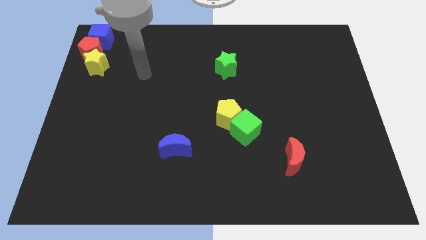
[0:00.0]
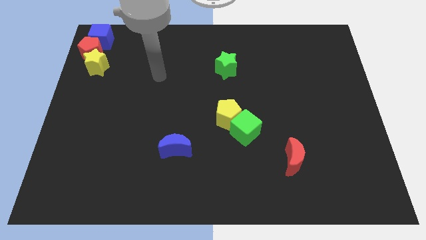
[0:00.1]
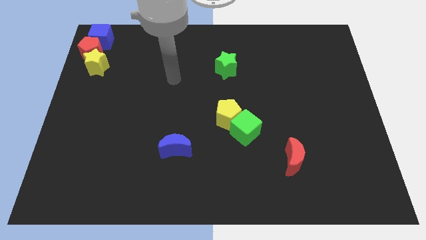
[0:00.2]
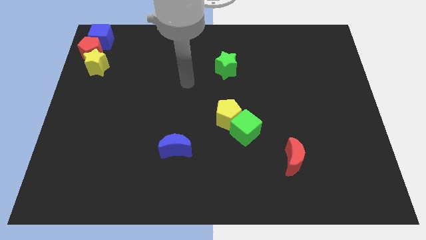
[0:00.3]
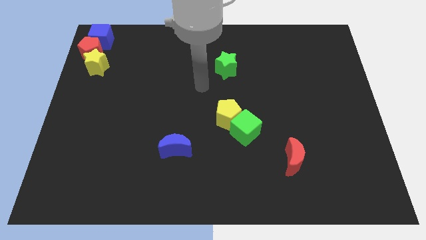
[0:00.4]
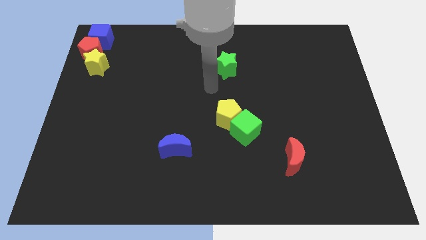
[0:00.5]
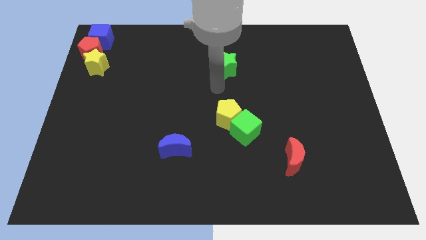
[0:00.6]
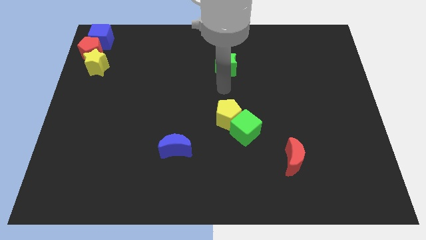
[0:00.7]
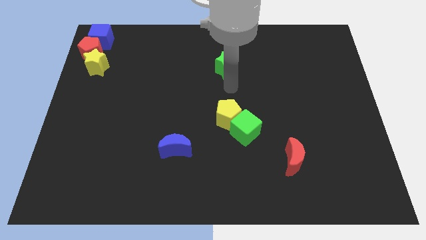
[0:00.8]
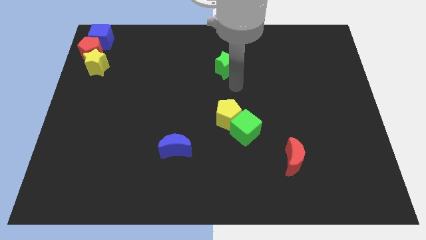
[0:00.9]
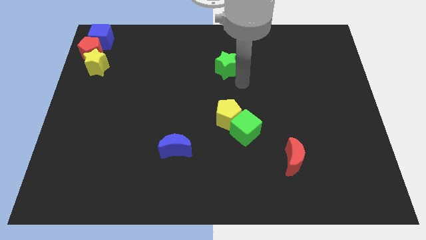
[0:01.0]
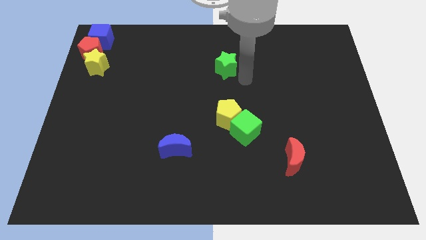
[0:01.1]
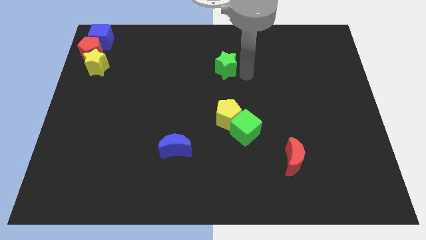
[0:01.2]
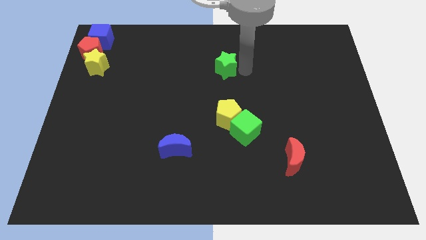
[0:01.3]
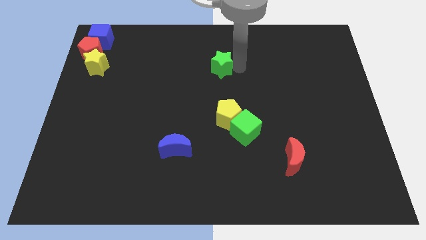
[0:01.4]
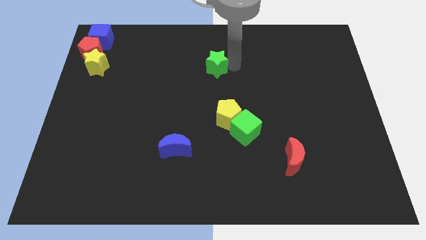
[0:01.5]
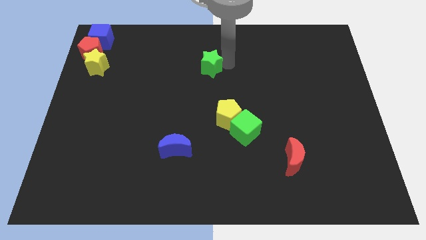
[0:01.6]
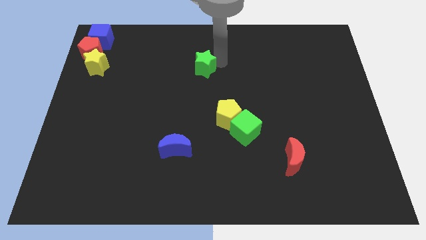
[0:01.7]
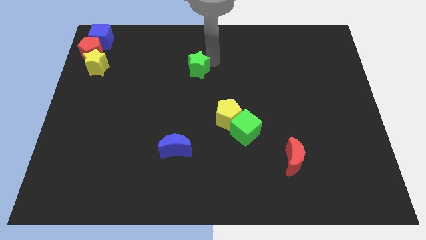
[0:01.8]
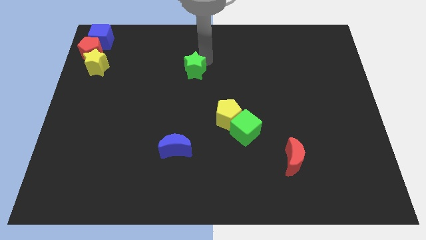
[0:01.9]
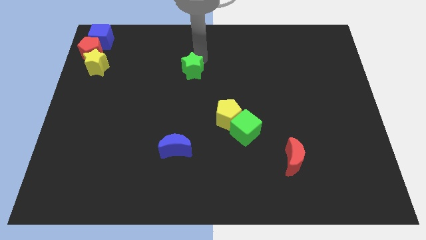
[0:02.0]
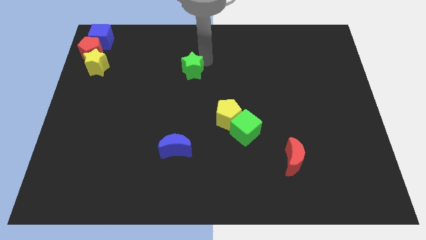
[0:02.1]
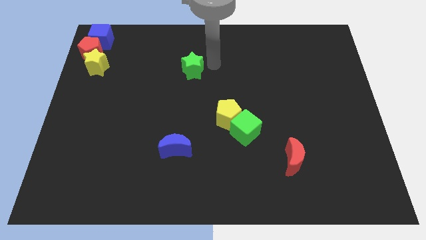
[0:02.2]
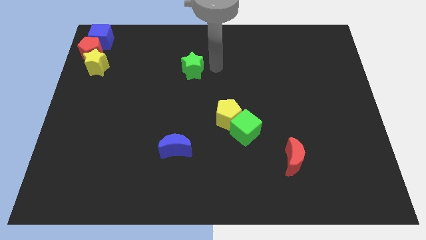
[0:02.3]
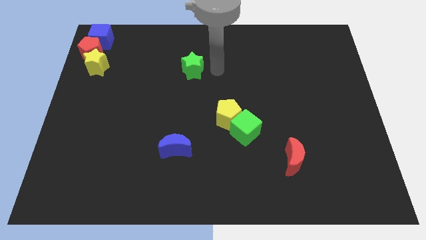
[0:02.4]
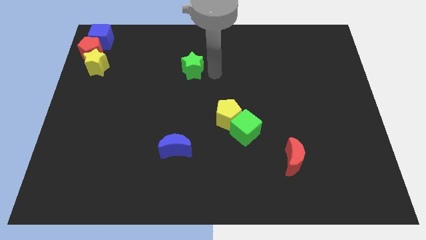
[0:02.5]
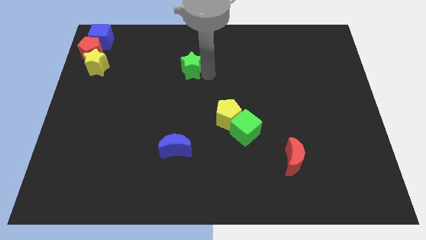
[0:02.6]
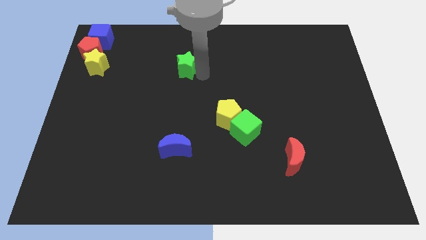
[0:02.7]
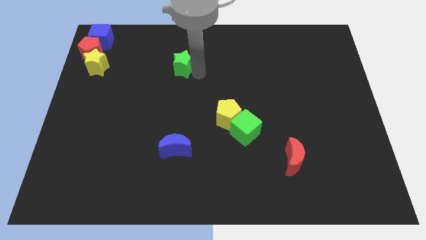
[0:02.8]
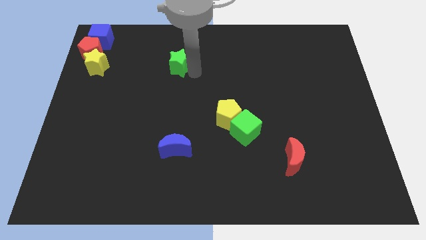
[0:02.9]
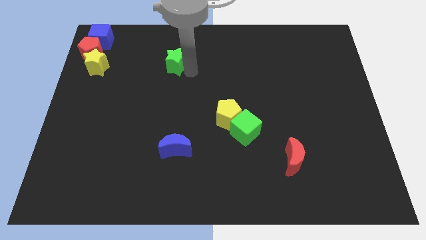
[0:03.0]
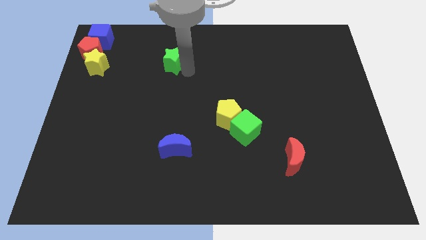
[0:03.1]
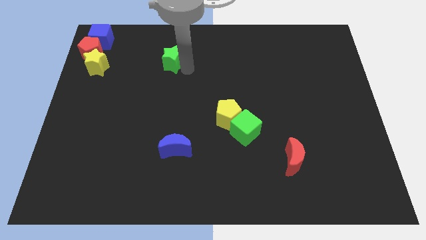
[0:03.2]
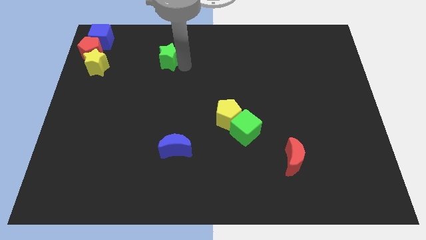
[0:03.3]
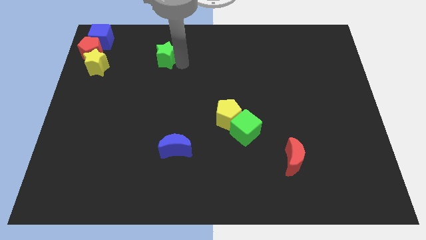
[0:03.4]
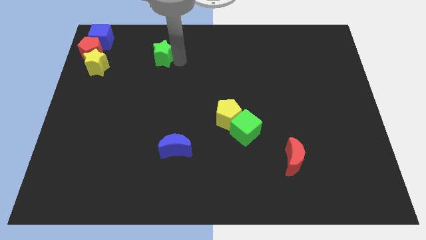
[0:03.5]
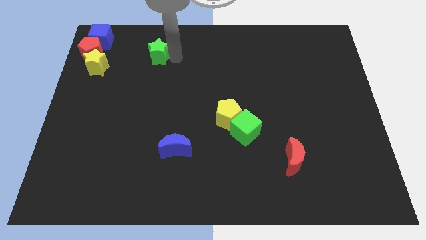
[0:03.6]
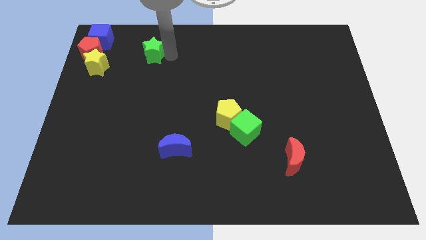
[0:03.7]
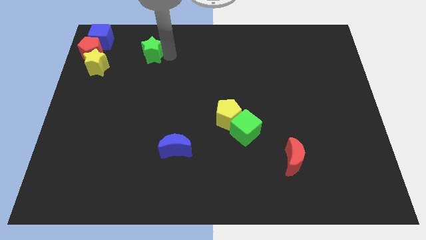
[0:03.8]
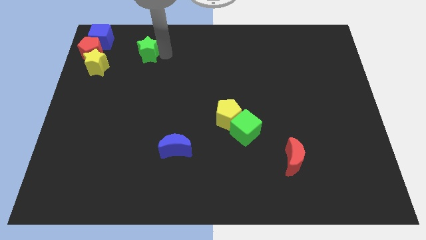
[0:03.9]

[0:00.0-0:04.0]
place the green star diagonal top right to yellow star

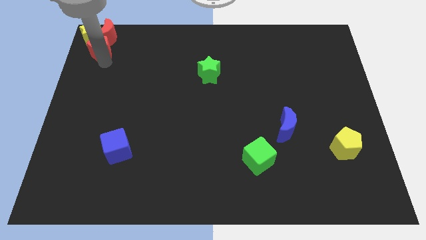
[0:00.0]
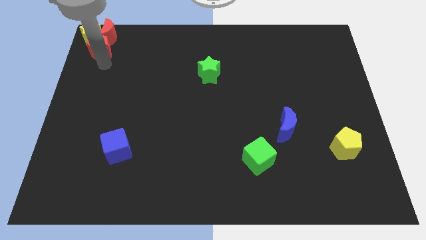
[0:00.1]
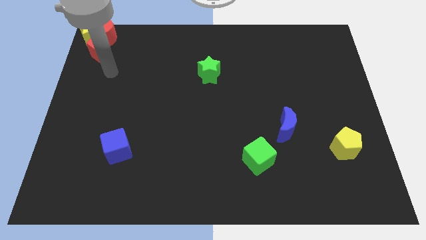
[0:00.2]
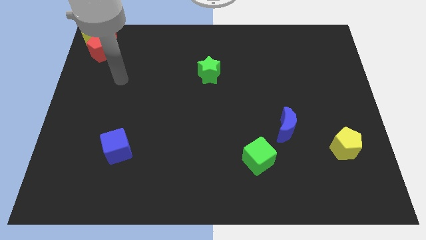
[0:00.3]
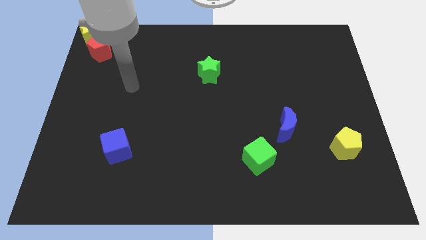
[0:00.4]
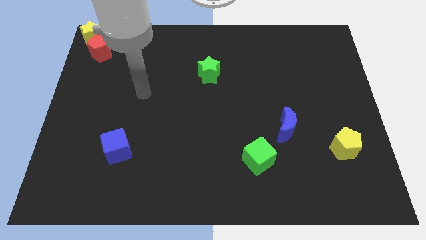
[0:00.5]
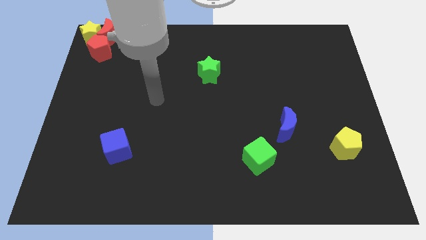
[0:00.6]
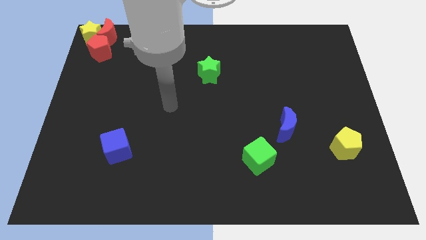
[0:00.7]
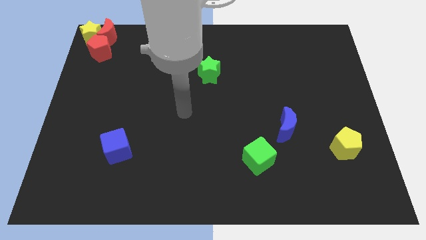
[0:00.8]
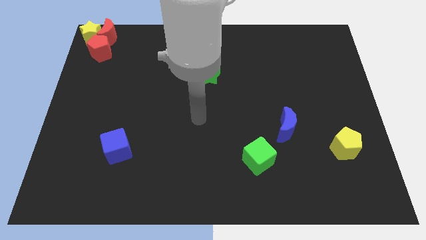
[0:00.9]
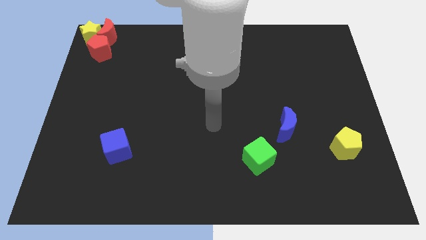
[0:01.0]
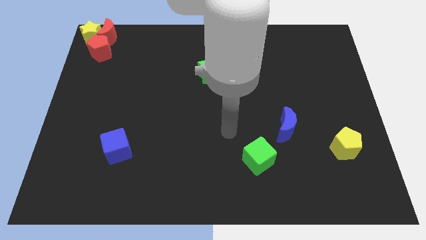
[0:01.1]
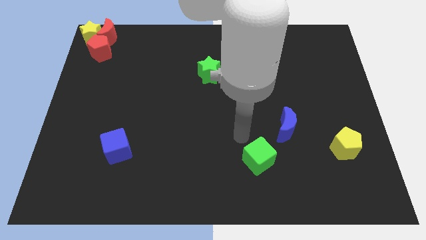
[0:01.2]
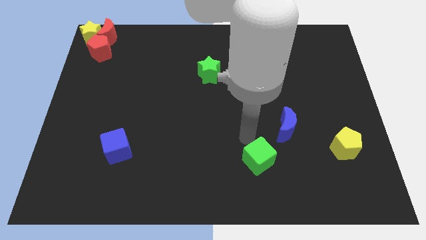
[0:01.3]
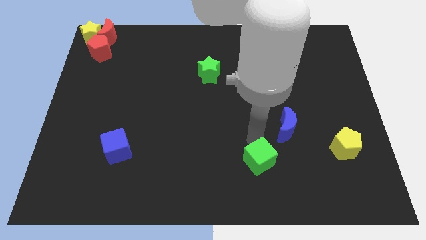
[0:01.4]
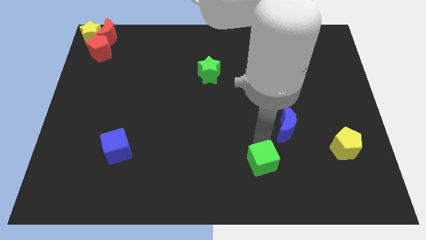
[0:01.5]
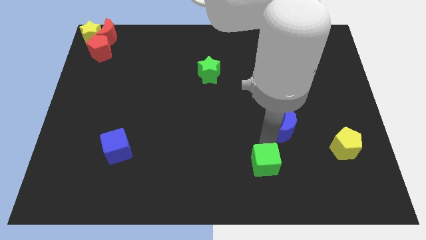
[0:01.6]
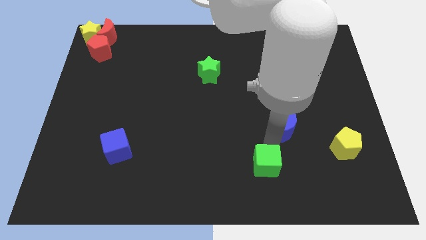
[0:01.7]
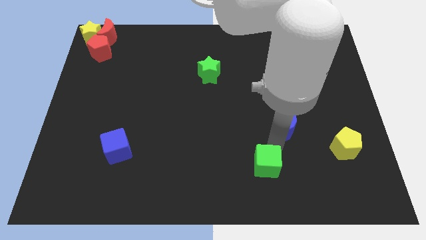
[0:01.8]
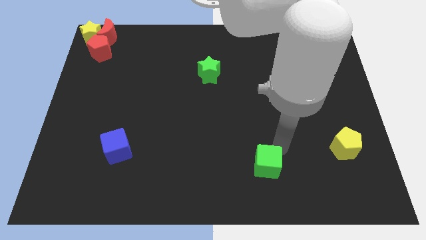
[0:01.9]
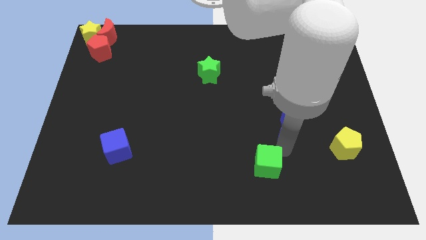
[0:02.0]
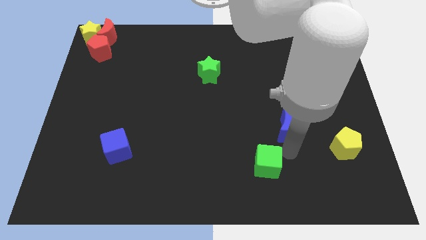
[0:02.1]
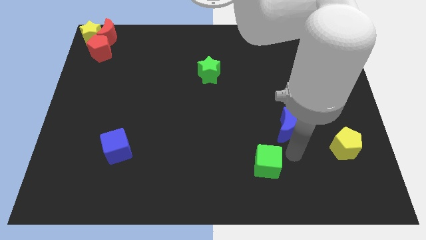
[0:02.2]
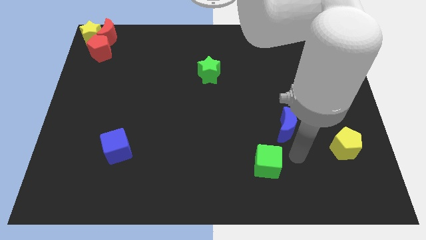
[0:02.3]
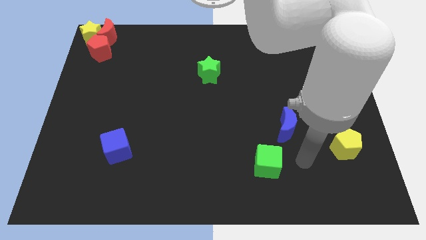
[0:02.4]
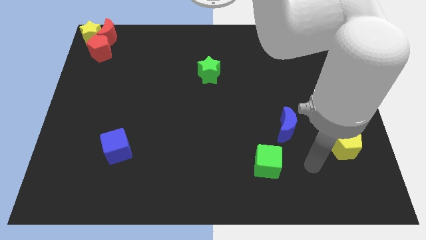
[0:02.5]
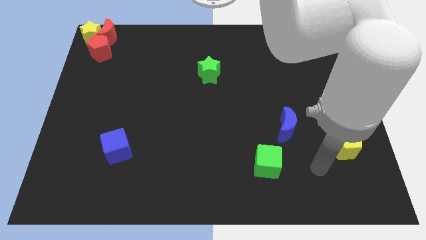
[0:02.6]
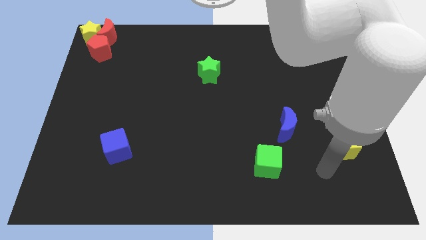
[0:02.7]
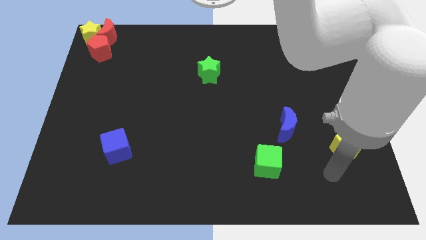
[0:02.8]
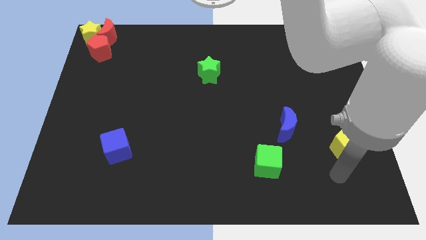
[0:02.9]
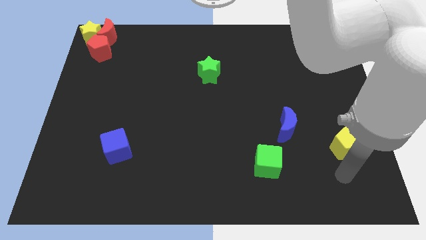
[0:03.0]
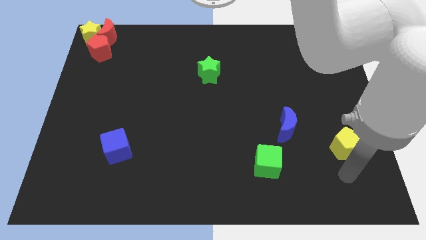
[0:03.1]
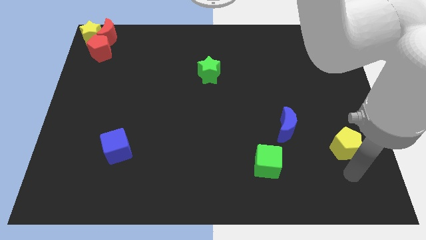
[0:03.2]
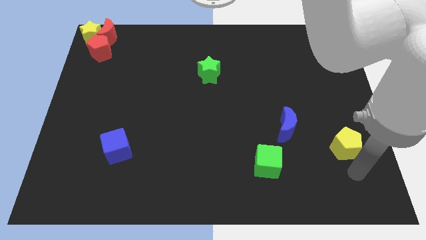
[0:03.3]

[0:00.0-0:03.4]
slightly push the green cube towards the bottom side

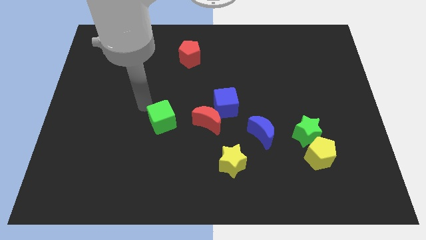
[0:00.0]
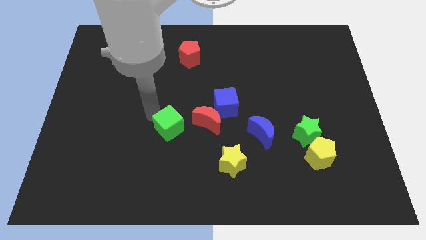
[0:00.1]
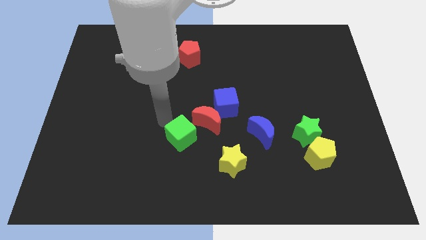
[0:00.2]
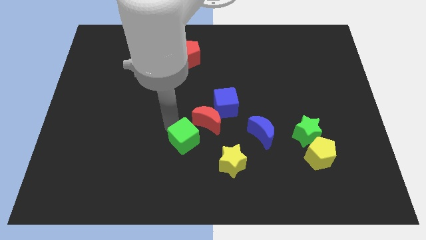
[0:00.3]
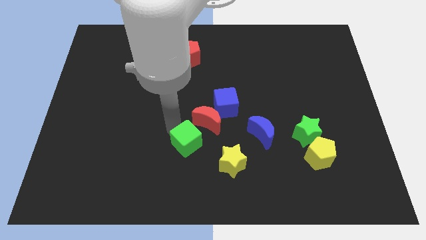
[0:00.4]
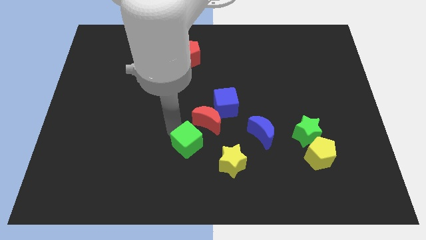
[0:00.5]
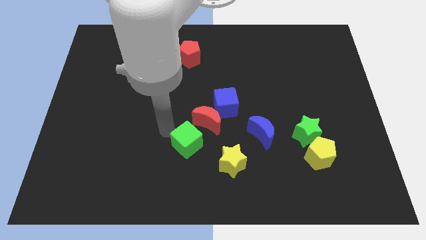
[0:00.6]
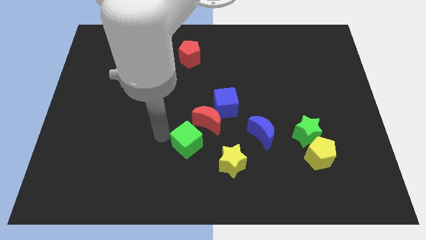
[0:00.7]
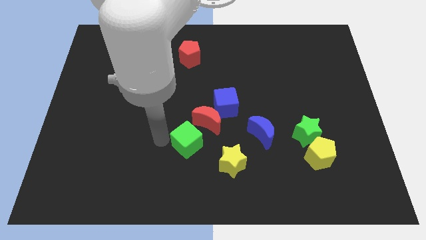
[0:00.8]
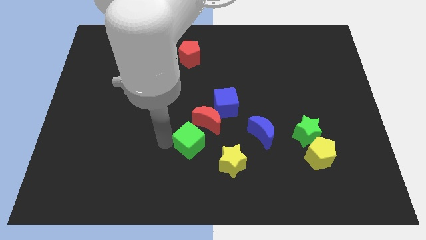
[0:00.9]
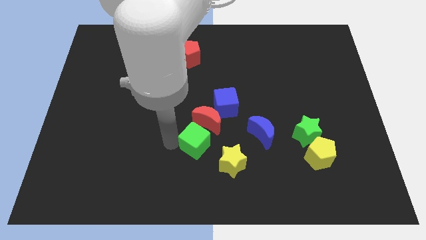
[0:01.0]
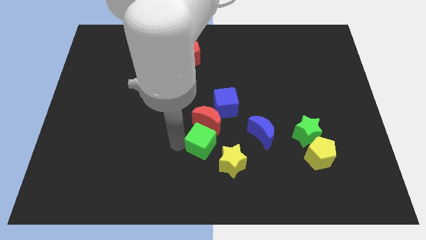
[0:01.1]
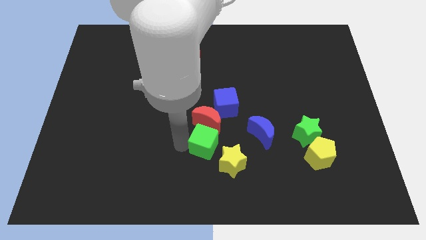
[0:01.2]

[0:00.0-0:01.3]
put a green cube close to the red moon
